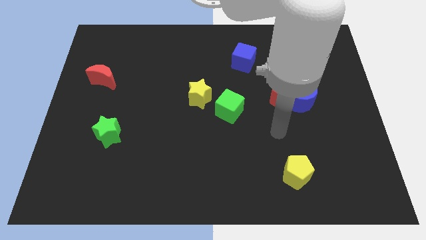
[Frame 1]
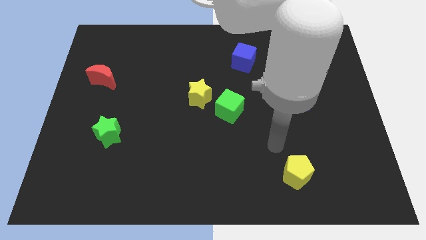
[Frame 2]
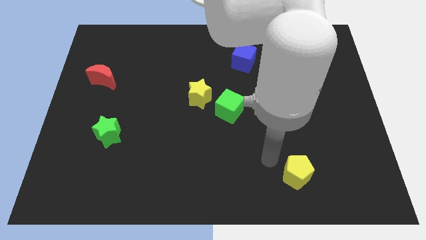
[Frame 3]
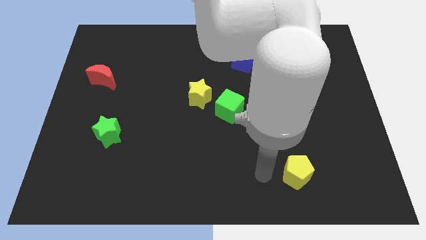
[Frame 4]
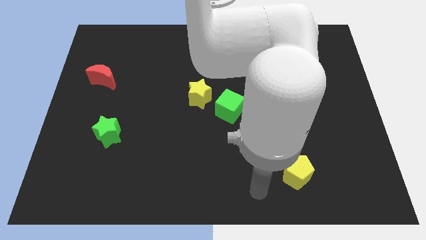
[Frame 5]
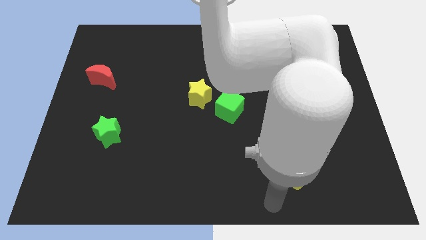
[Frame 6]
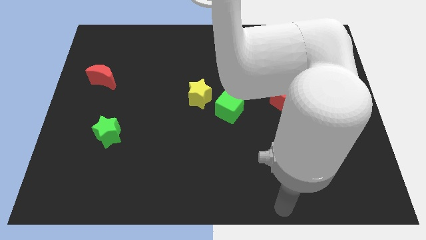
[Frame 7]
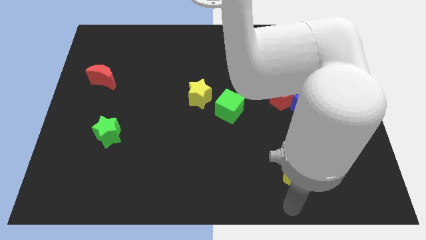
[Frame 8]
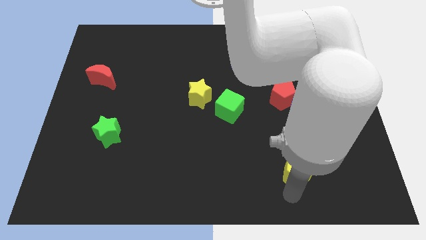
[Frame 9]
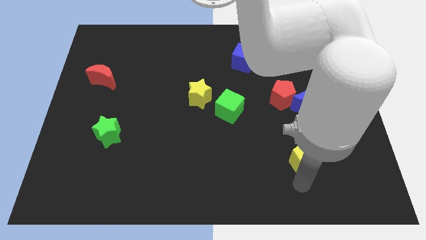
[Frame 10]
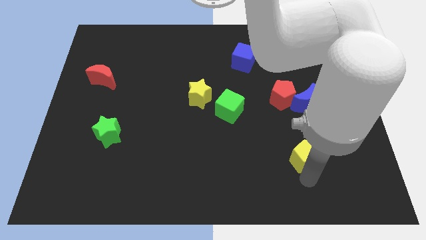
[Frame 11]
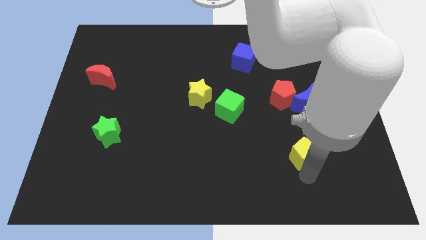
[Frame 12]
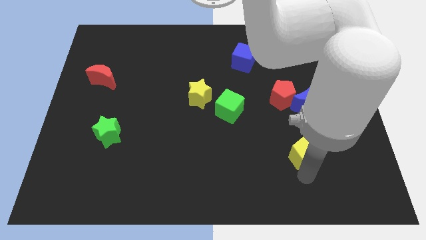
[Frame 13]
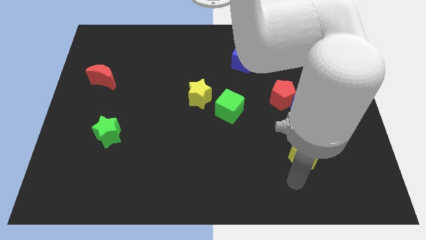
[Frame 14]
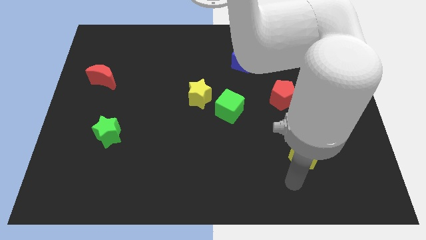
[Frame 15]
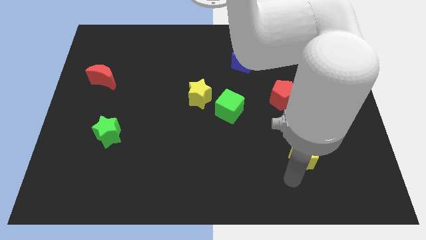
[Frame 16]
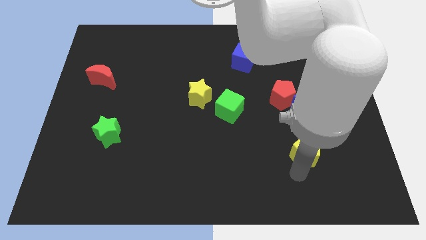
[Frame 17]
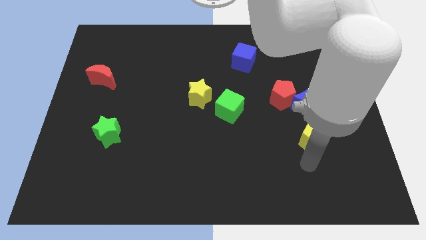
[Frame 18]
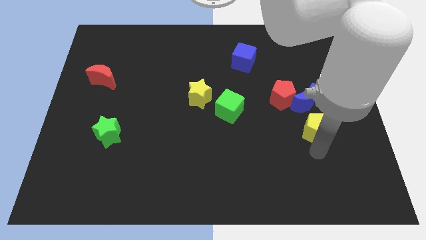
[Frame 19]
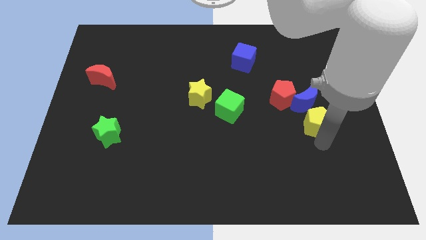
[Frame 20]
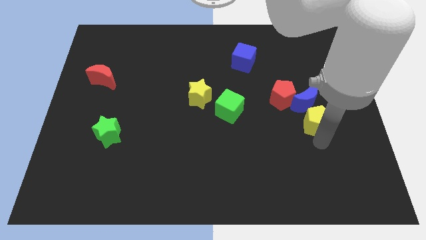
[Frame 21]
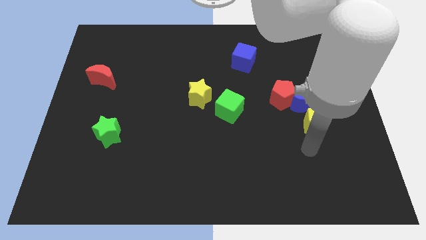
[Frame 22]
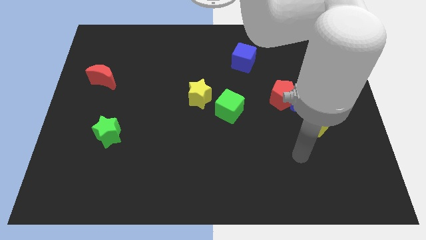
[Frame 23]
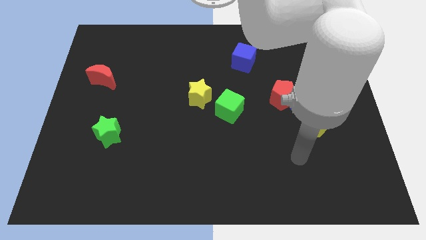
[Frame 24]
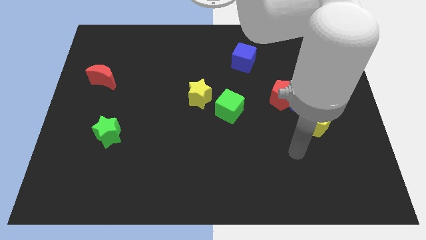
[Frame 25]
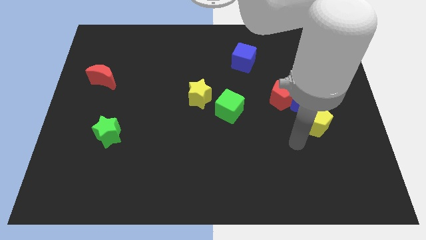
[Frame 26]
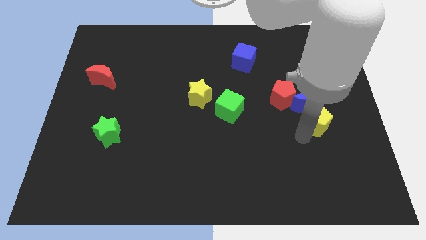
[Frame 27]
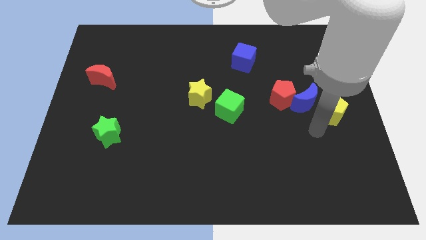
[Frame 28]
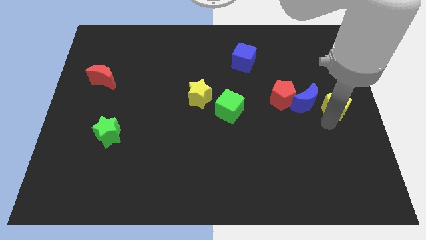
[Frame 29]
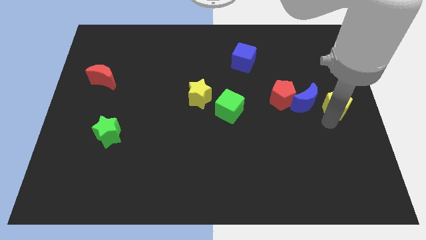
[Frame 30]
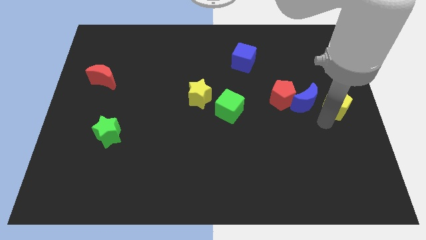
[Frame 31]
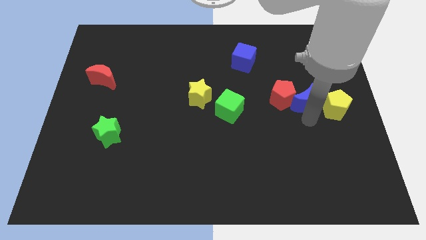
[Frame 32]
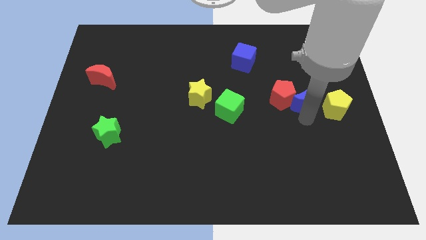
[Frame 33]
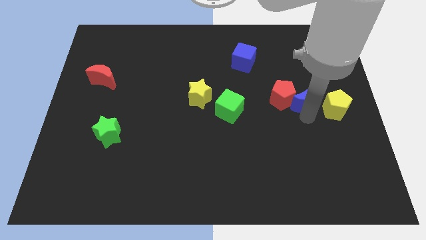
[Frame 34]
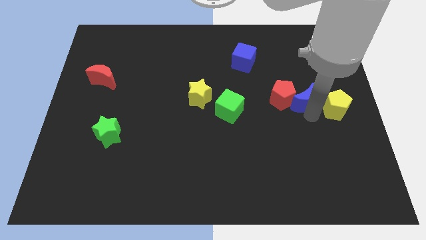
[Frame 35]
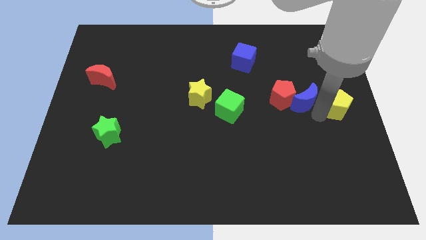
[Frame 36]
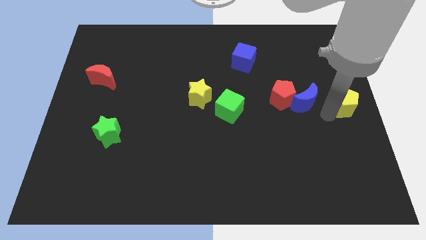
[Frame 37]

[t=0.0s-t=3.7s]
place yellow pentagon to the right side of blue crescent

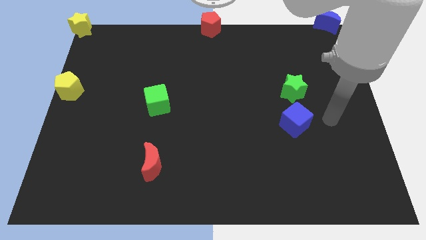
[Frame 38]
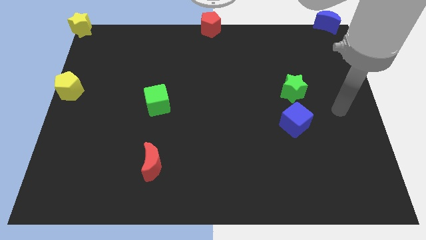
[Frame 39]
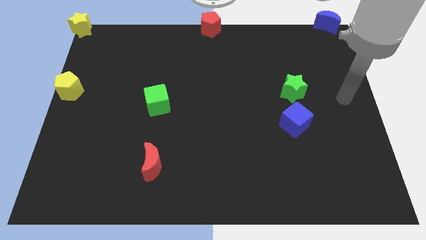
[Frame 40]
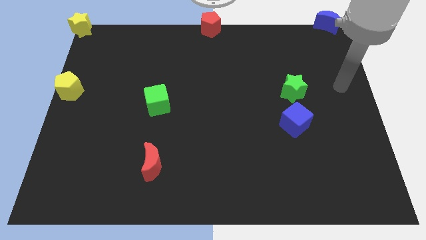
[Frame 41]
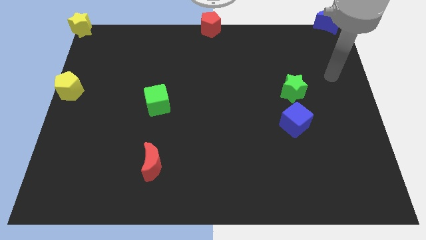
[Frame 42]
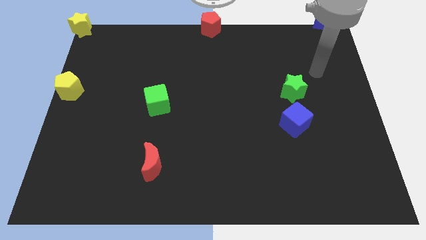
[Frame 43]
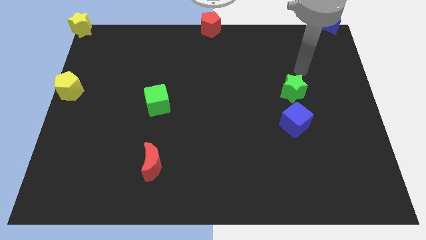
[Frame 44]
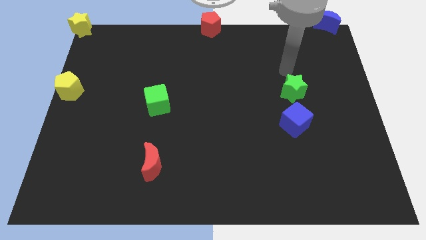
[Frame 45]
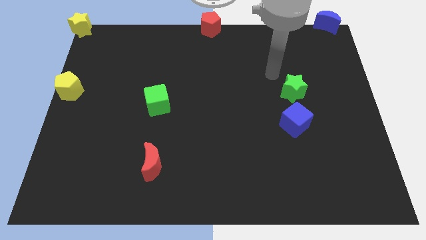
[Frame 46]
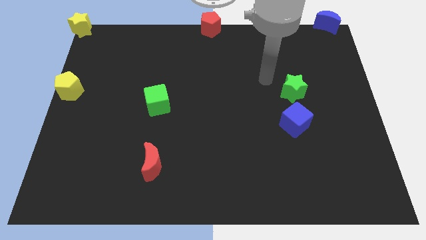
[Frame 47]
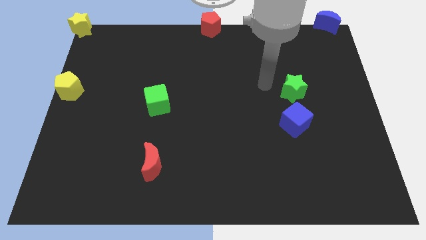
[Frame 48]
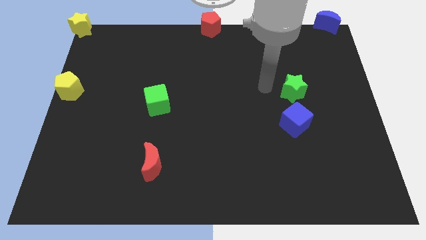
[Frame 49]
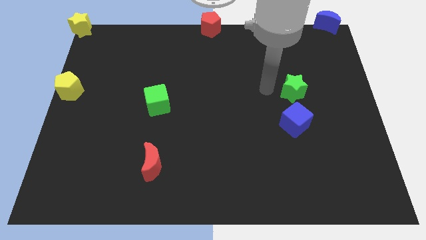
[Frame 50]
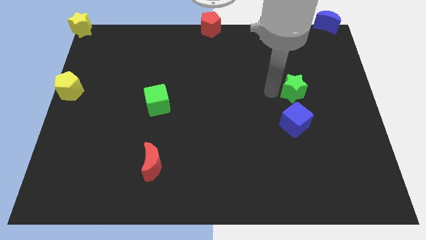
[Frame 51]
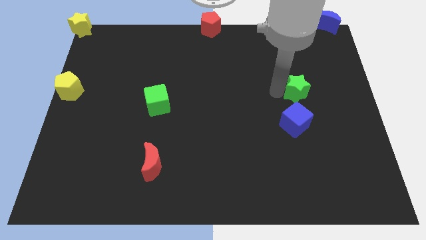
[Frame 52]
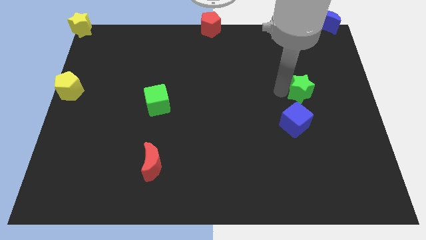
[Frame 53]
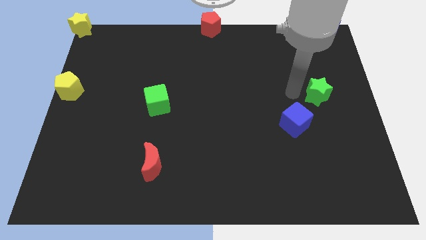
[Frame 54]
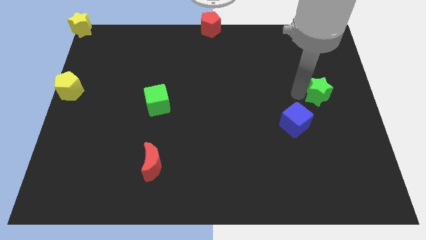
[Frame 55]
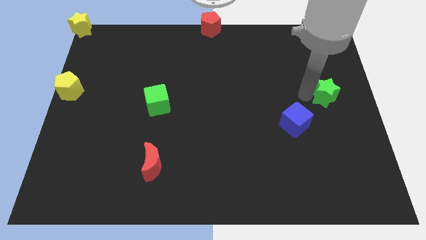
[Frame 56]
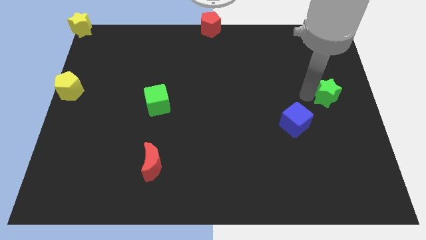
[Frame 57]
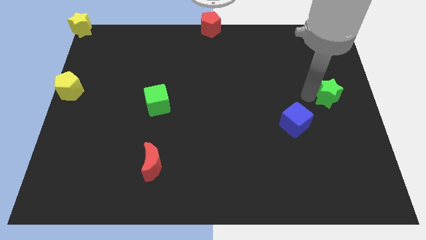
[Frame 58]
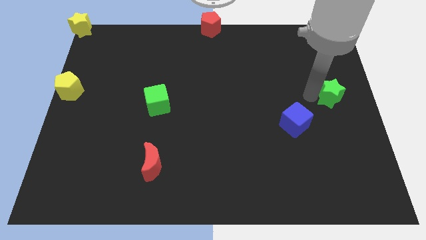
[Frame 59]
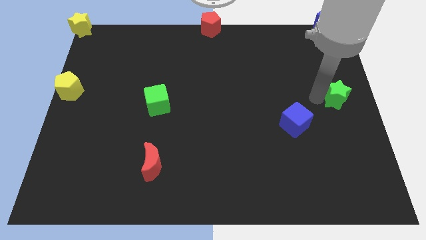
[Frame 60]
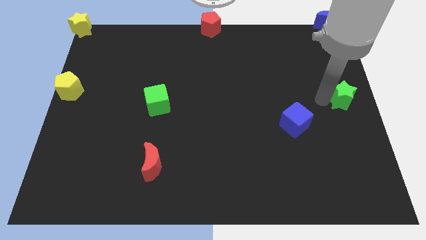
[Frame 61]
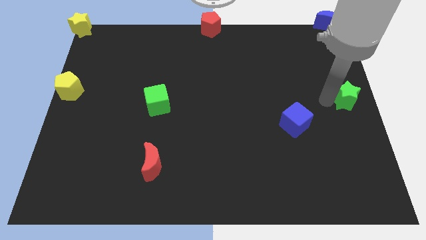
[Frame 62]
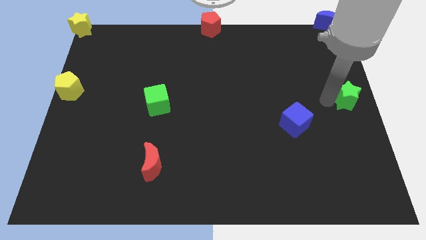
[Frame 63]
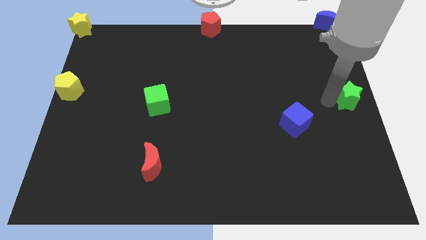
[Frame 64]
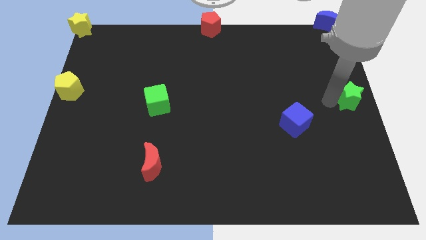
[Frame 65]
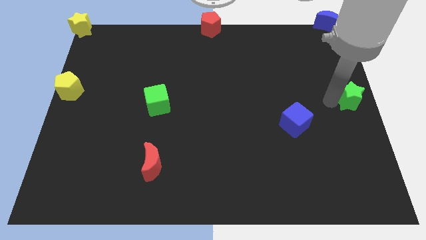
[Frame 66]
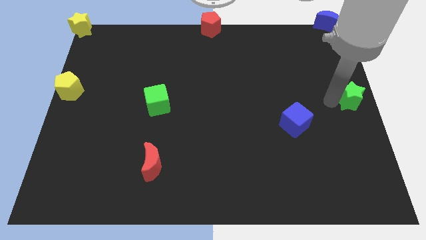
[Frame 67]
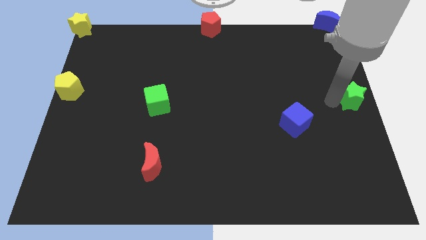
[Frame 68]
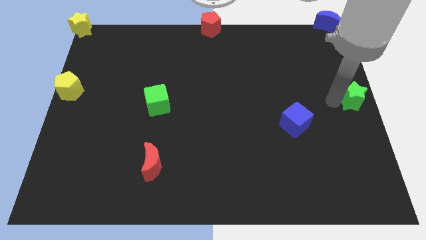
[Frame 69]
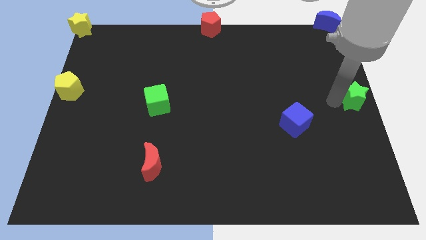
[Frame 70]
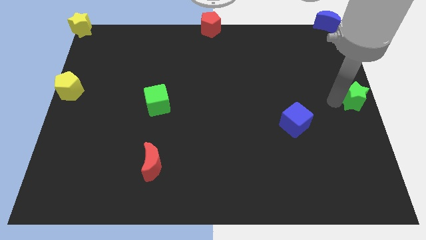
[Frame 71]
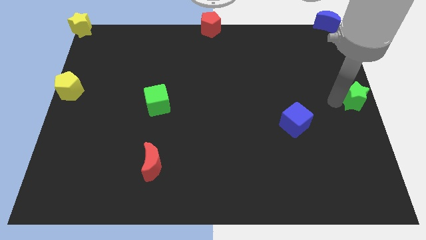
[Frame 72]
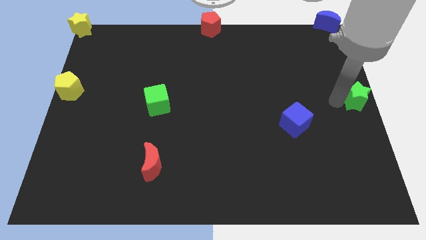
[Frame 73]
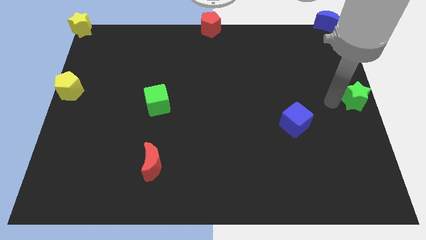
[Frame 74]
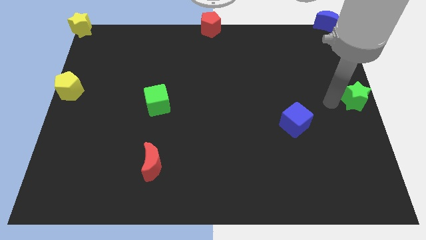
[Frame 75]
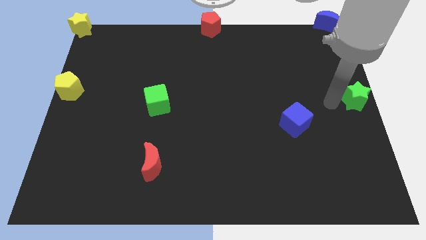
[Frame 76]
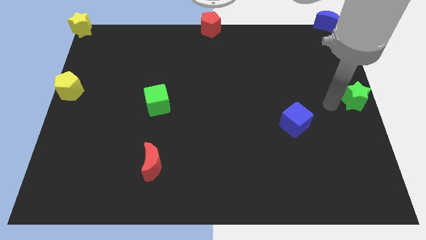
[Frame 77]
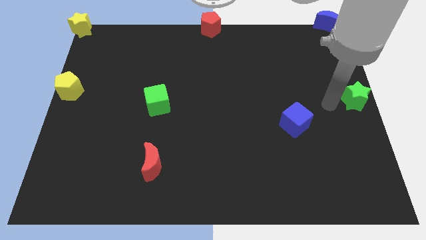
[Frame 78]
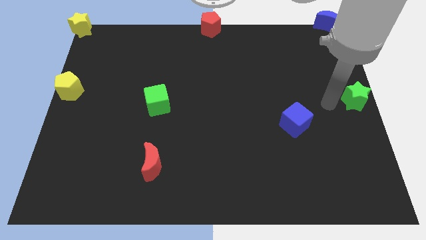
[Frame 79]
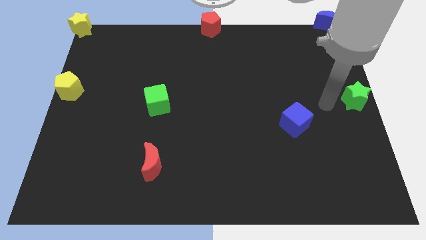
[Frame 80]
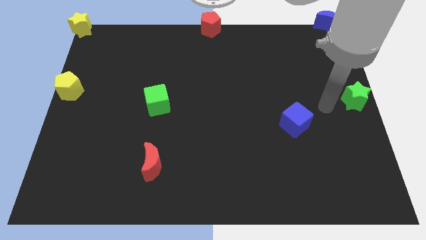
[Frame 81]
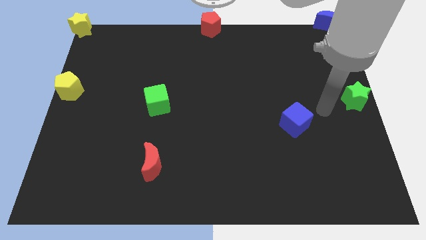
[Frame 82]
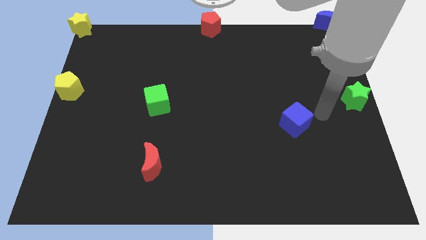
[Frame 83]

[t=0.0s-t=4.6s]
place the green star to the vertical bottom side of the blue moon

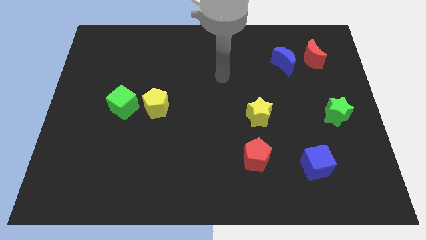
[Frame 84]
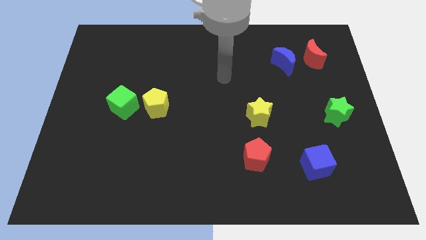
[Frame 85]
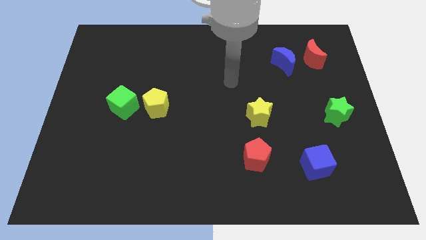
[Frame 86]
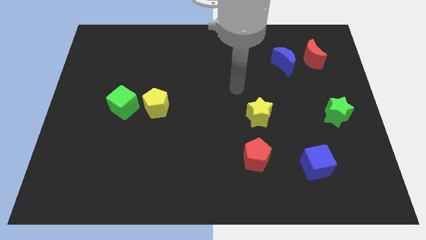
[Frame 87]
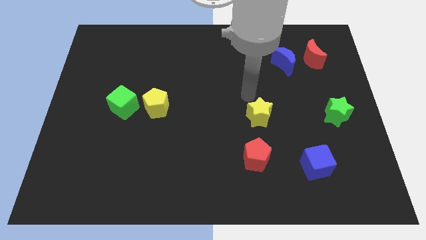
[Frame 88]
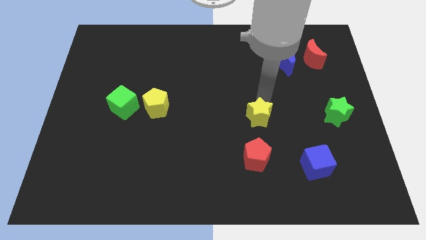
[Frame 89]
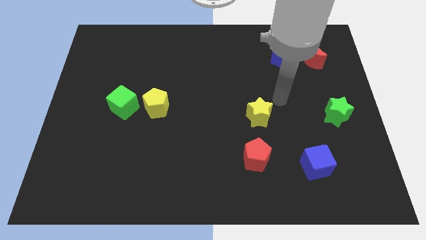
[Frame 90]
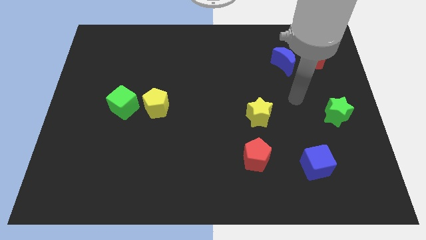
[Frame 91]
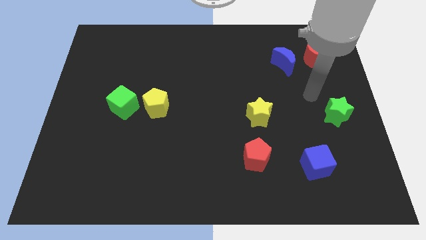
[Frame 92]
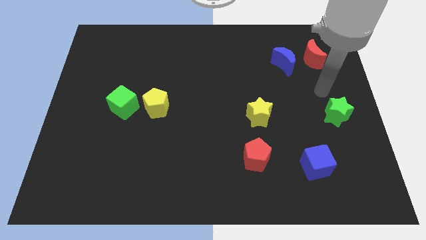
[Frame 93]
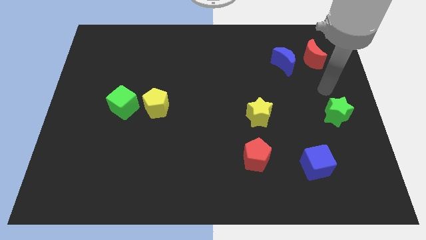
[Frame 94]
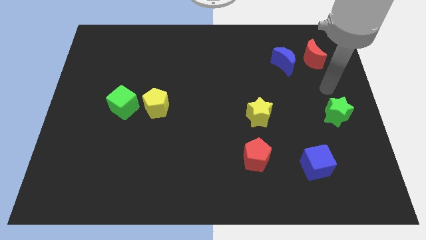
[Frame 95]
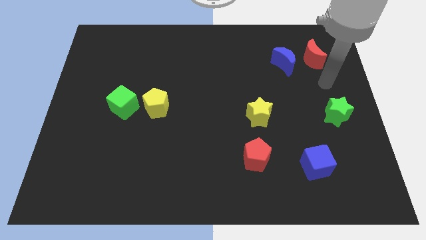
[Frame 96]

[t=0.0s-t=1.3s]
point your arm at the top of the green star
